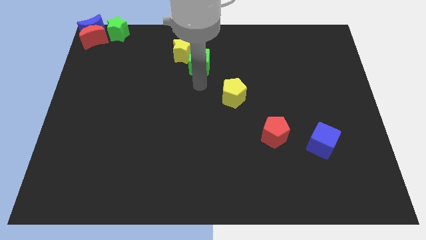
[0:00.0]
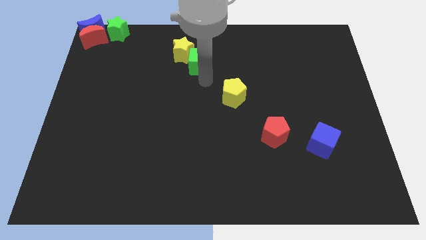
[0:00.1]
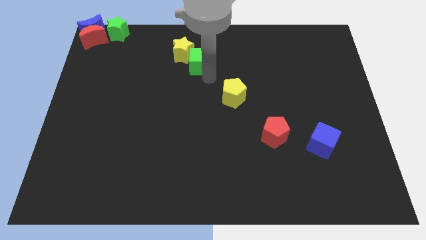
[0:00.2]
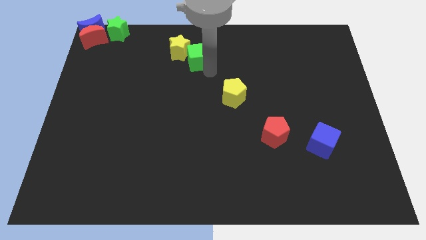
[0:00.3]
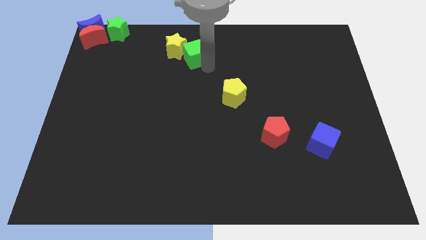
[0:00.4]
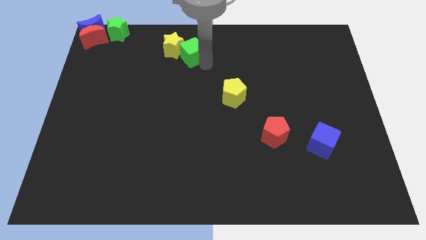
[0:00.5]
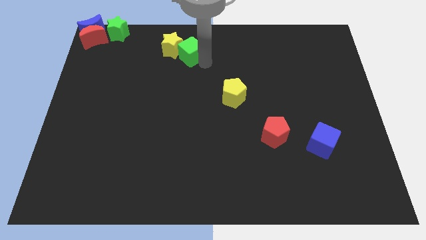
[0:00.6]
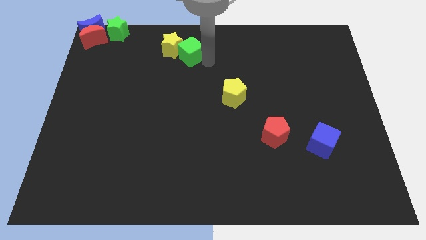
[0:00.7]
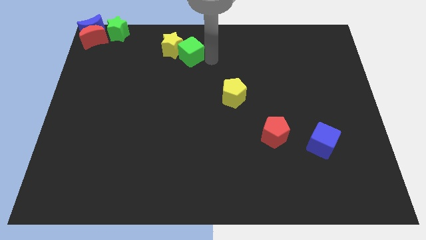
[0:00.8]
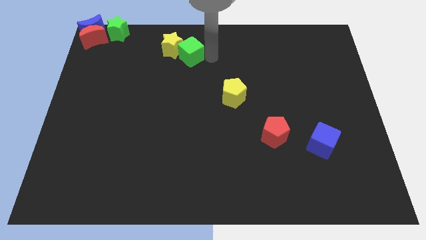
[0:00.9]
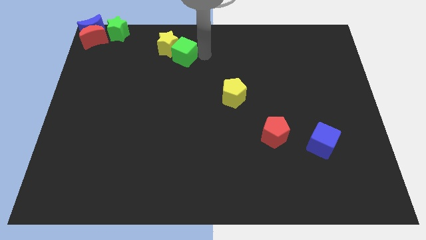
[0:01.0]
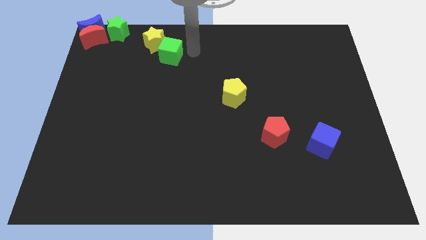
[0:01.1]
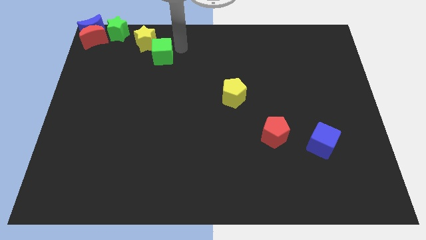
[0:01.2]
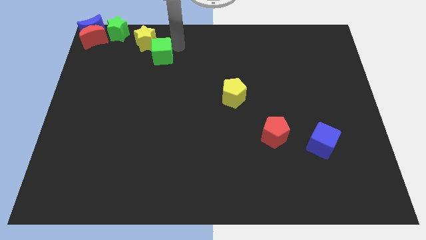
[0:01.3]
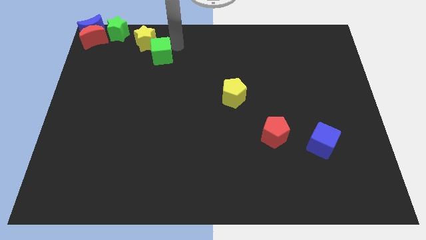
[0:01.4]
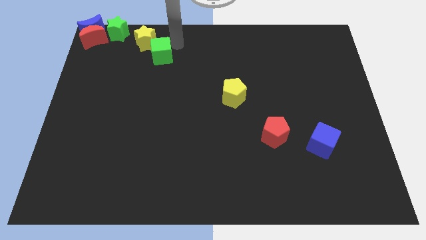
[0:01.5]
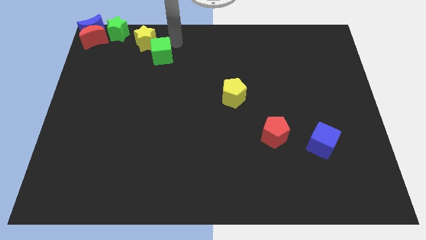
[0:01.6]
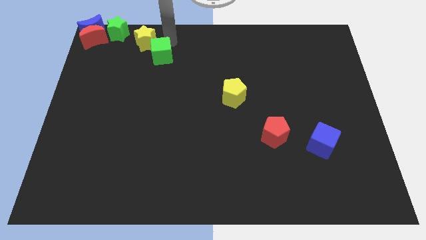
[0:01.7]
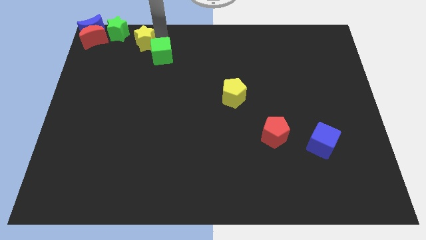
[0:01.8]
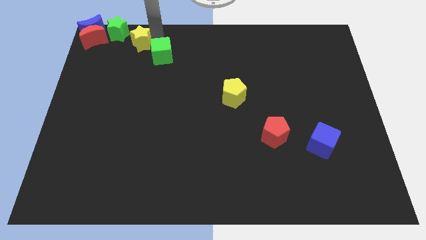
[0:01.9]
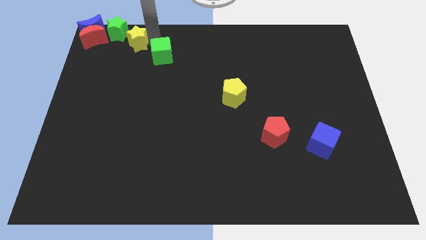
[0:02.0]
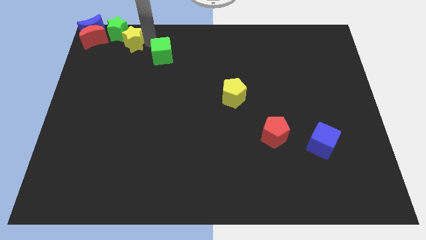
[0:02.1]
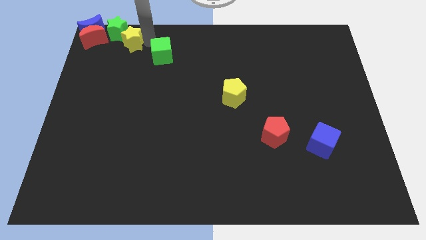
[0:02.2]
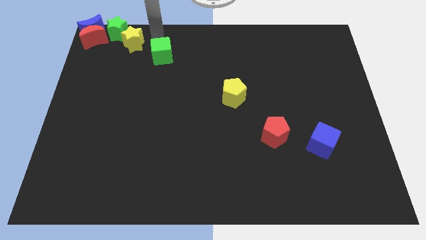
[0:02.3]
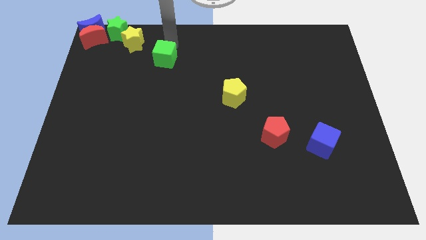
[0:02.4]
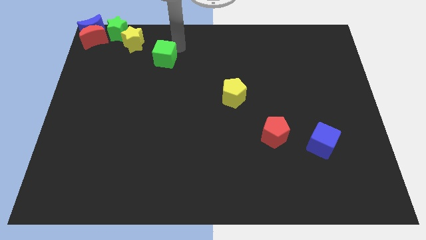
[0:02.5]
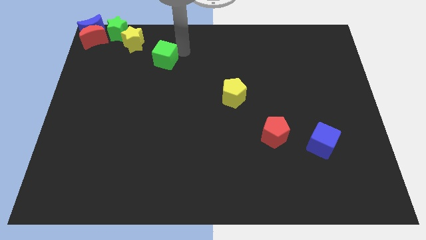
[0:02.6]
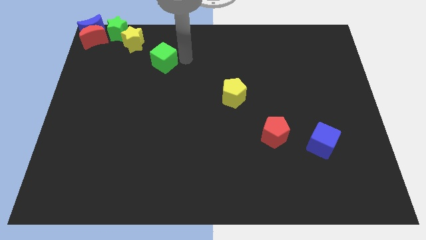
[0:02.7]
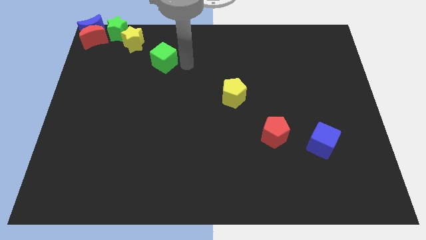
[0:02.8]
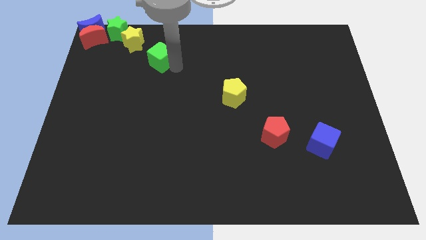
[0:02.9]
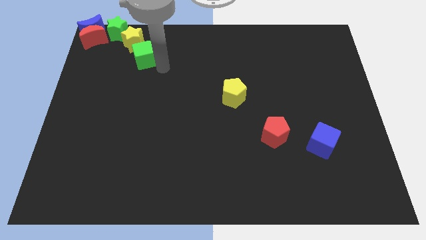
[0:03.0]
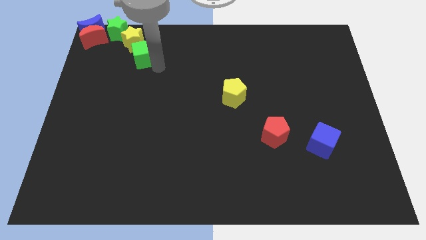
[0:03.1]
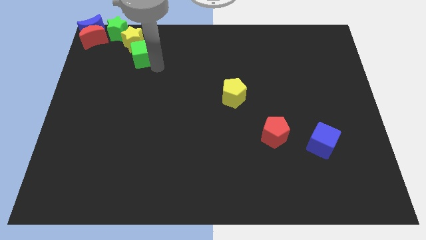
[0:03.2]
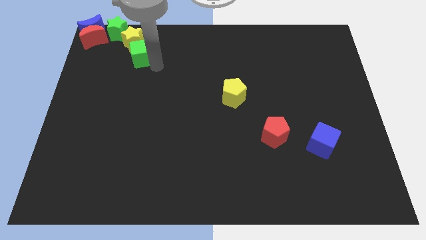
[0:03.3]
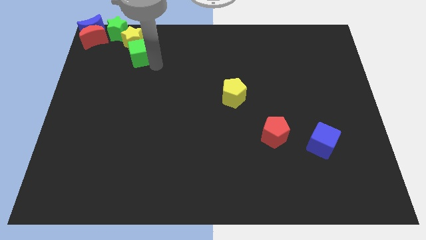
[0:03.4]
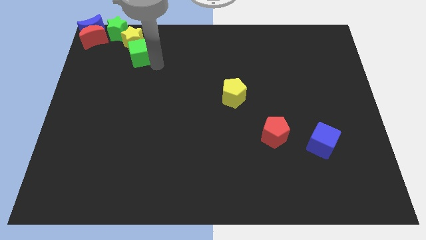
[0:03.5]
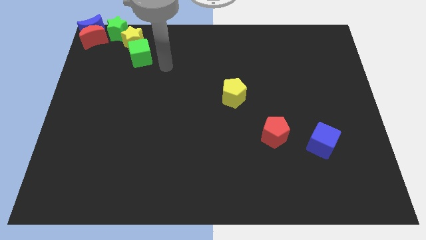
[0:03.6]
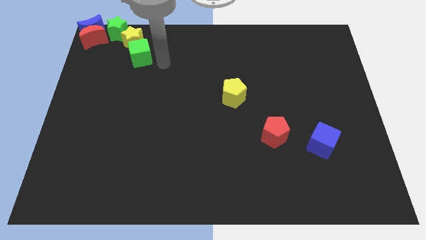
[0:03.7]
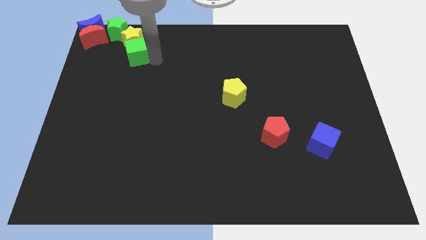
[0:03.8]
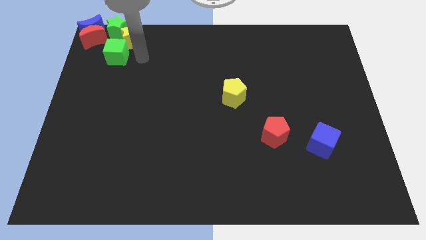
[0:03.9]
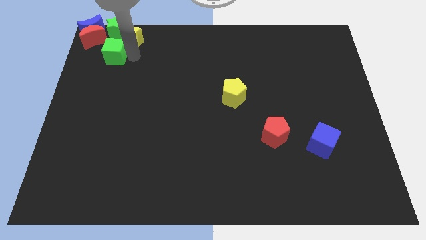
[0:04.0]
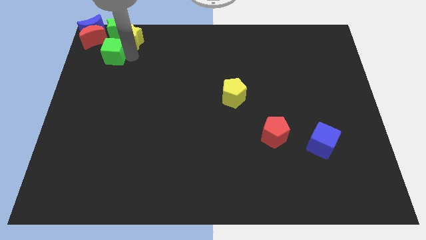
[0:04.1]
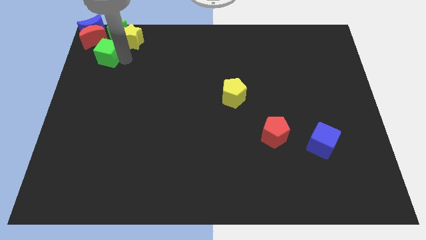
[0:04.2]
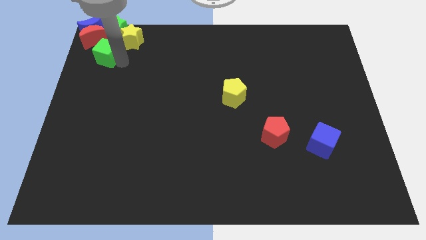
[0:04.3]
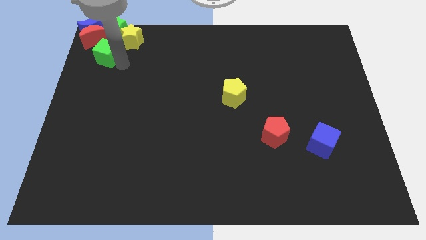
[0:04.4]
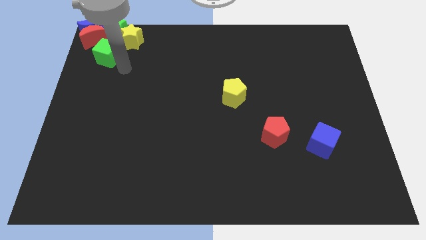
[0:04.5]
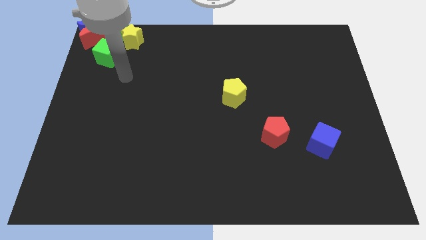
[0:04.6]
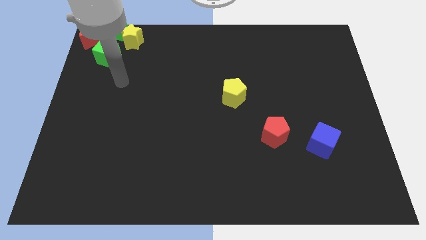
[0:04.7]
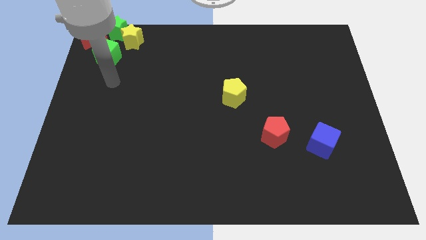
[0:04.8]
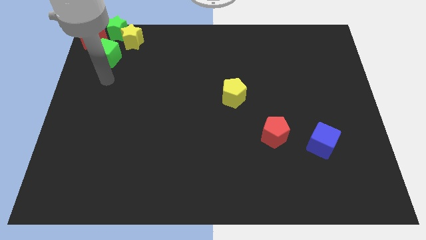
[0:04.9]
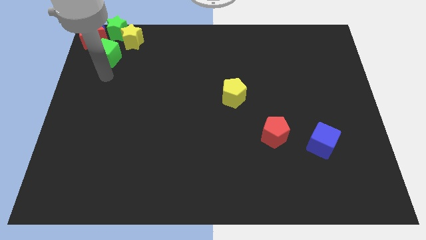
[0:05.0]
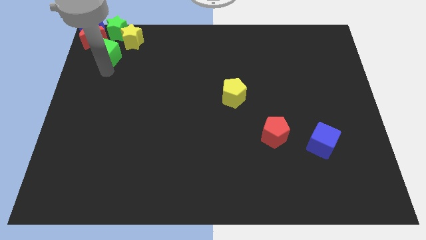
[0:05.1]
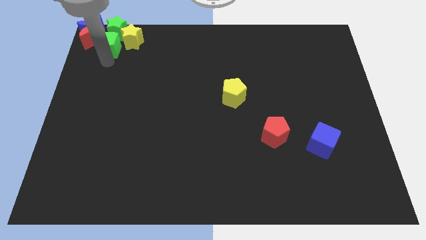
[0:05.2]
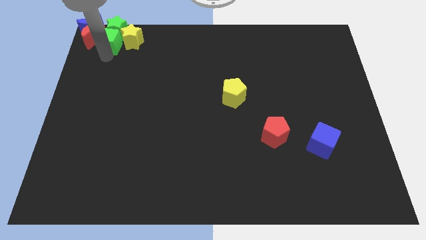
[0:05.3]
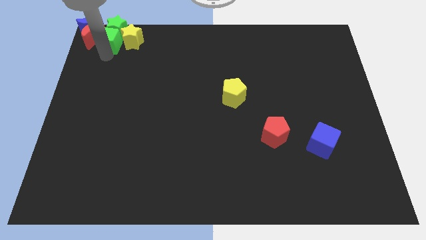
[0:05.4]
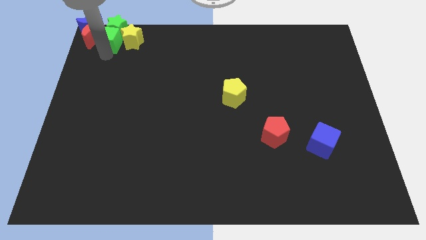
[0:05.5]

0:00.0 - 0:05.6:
move the yellow star and green cube into the green star

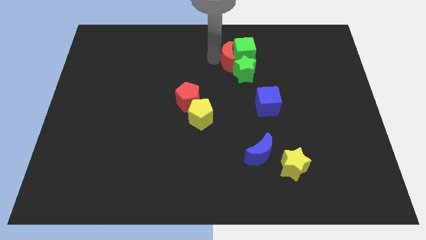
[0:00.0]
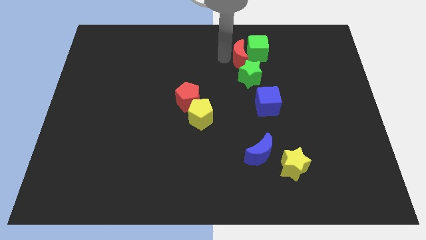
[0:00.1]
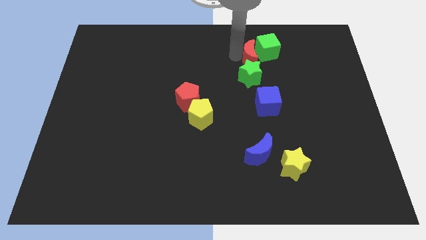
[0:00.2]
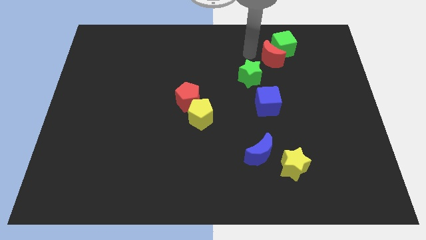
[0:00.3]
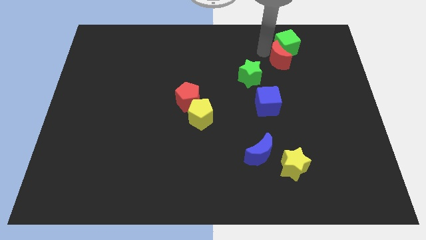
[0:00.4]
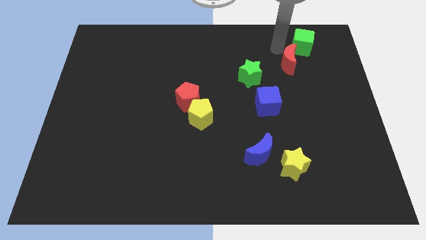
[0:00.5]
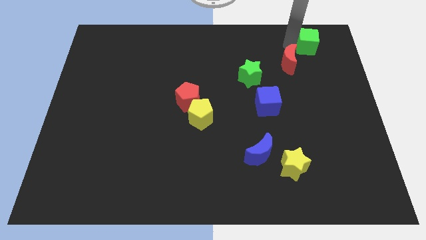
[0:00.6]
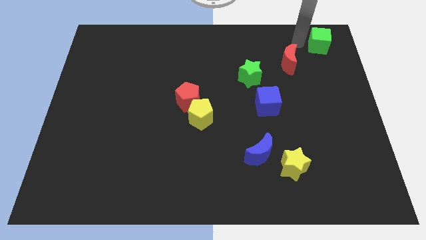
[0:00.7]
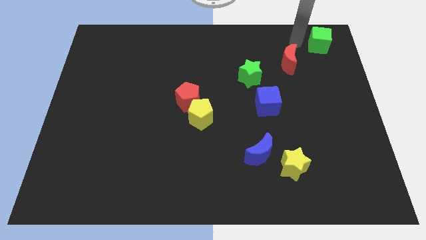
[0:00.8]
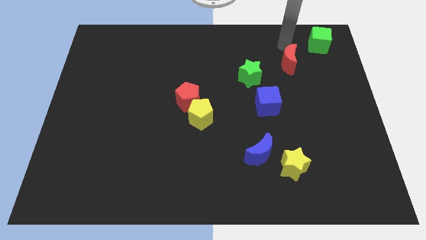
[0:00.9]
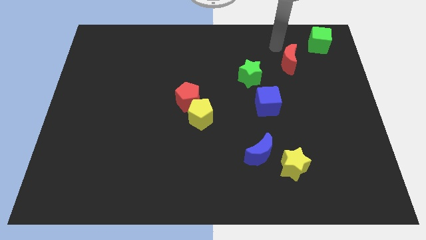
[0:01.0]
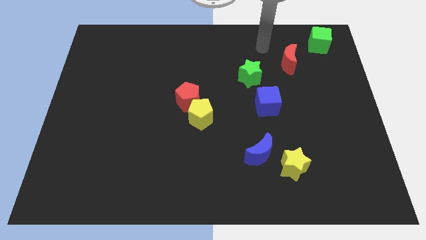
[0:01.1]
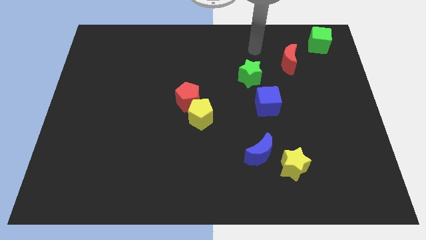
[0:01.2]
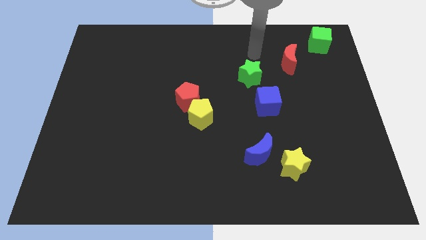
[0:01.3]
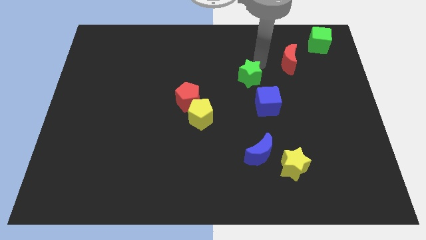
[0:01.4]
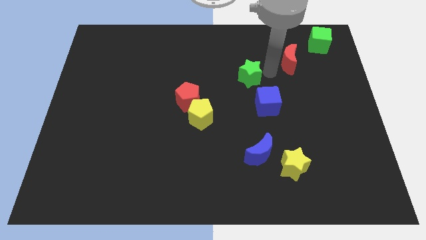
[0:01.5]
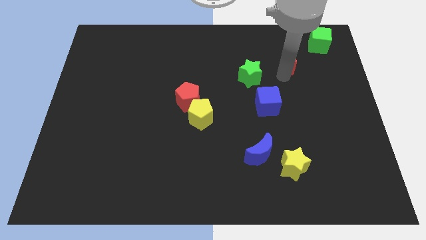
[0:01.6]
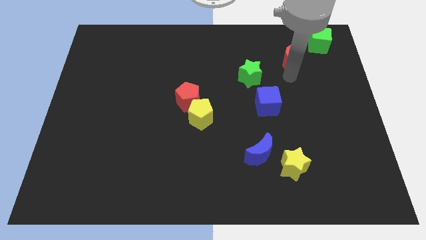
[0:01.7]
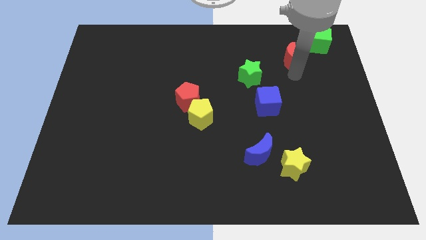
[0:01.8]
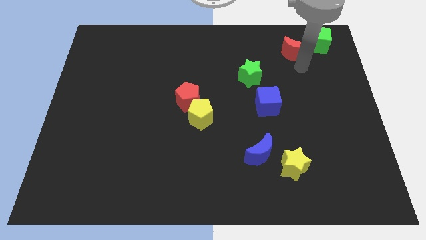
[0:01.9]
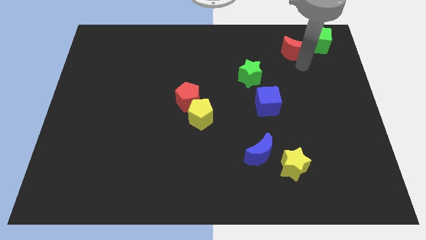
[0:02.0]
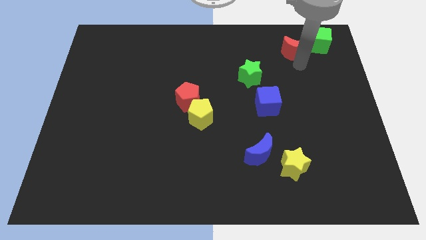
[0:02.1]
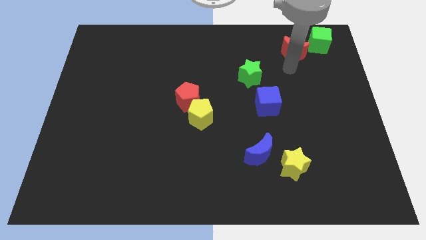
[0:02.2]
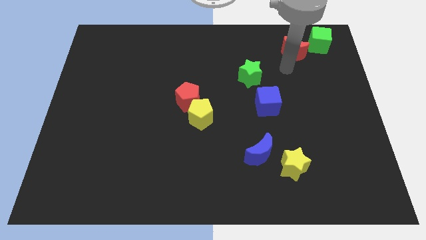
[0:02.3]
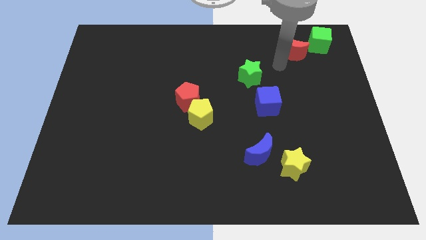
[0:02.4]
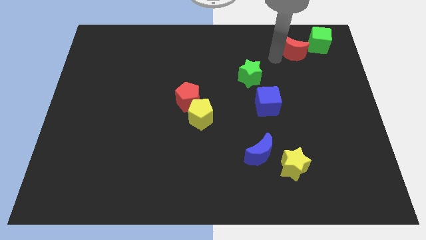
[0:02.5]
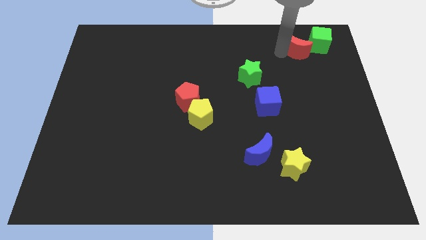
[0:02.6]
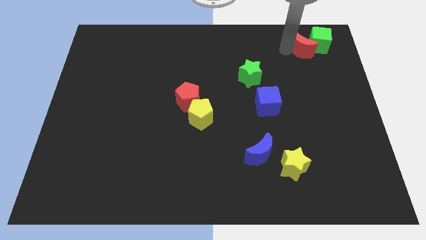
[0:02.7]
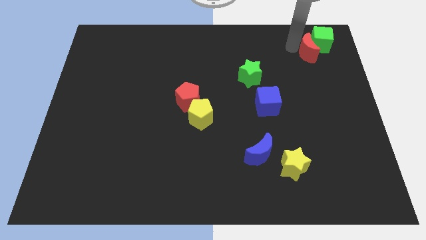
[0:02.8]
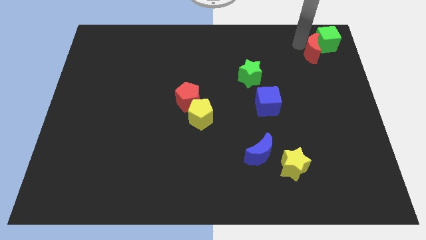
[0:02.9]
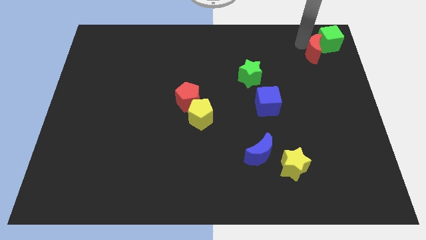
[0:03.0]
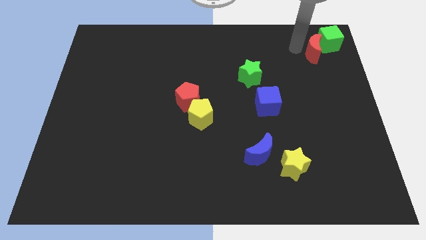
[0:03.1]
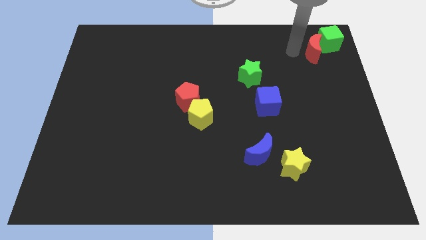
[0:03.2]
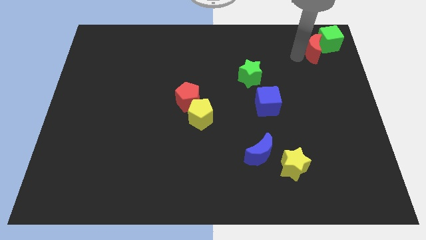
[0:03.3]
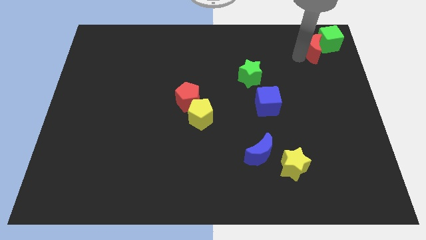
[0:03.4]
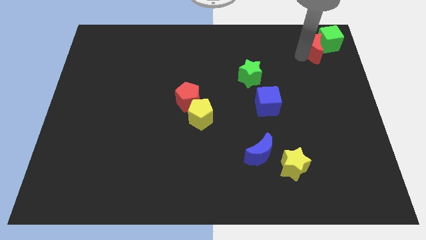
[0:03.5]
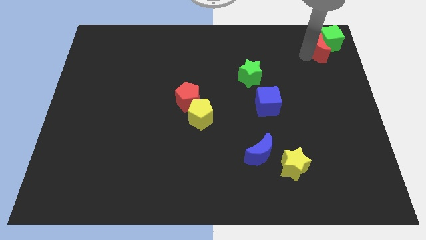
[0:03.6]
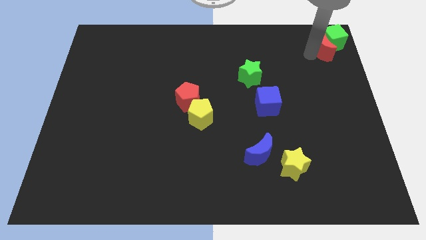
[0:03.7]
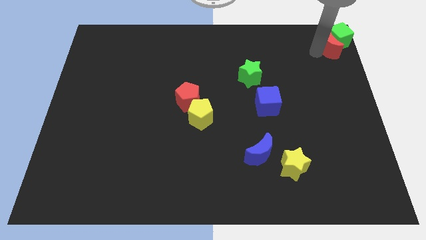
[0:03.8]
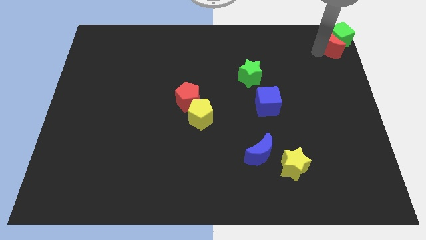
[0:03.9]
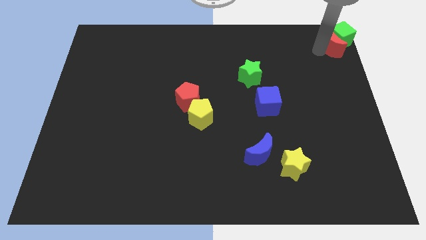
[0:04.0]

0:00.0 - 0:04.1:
drag the red crescent and green cube at the top right of the table
